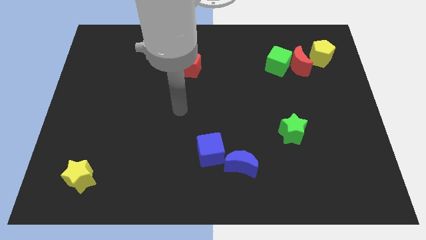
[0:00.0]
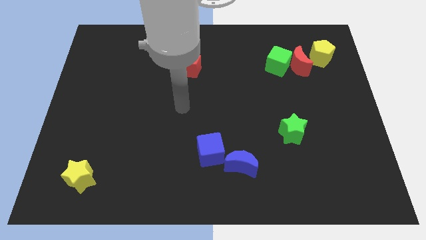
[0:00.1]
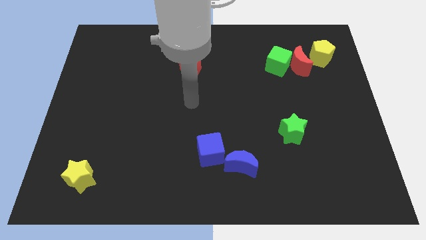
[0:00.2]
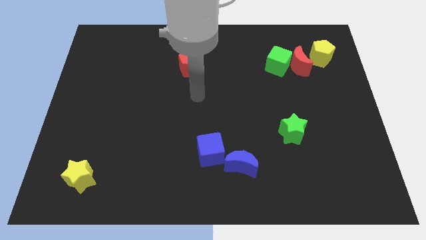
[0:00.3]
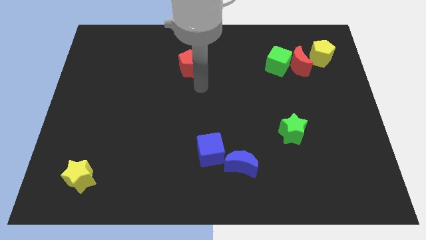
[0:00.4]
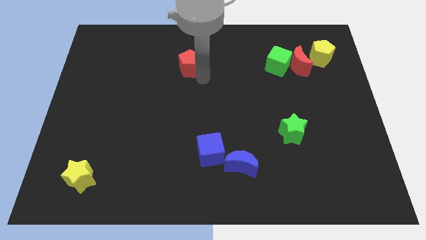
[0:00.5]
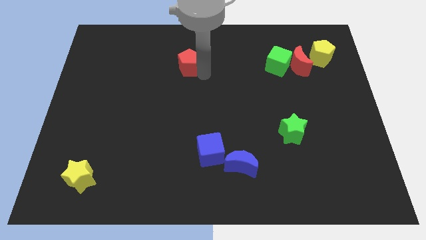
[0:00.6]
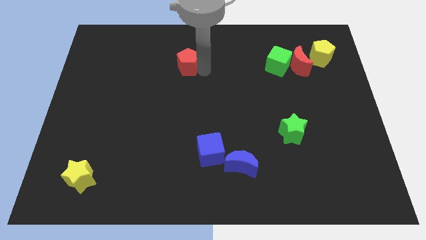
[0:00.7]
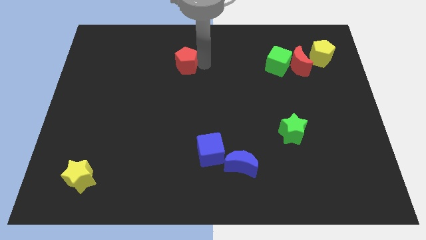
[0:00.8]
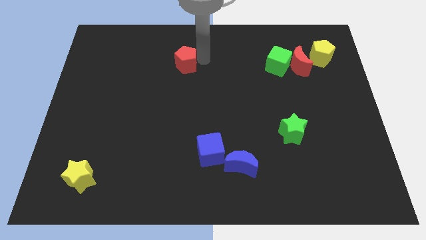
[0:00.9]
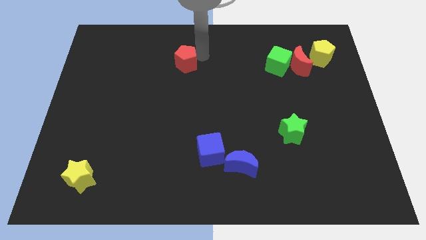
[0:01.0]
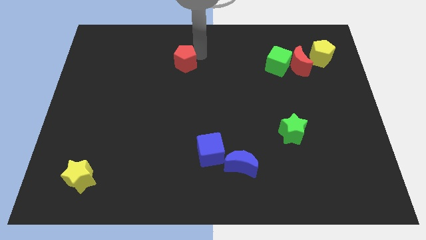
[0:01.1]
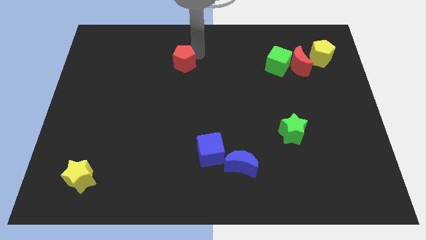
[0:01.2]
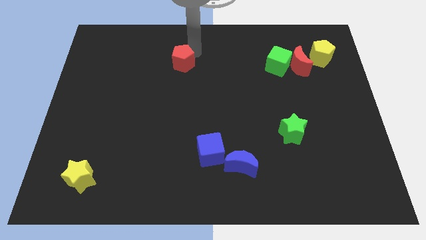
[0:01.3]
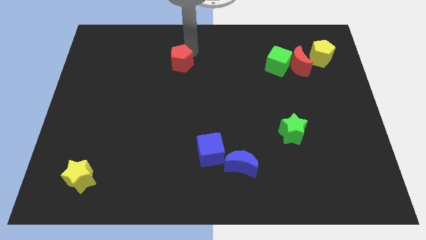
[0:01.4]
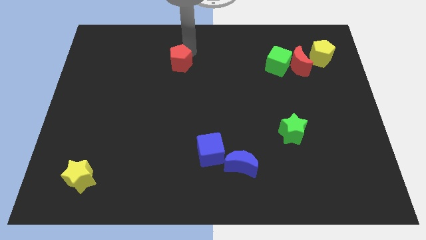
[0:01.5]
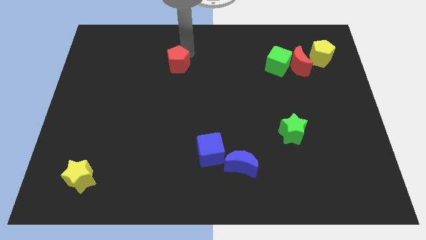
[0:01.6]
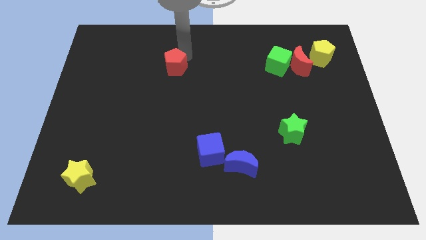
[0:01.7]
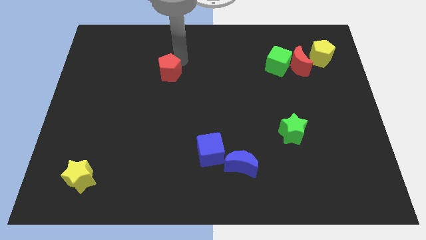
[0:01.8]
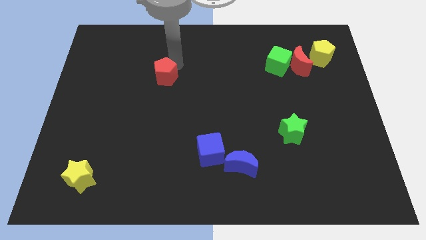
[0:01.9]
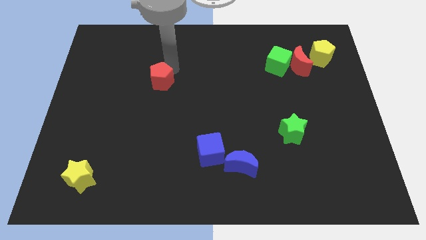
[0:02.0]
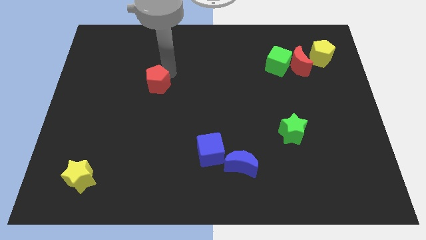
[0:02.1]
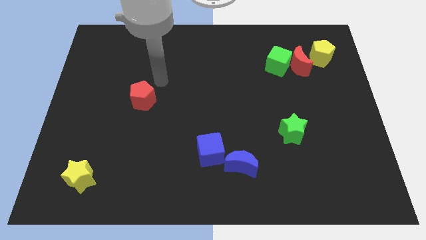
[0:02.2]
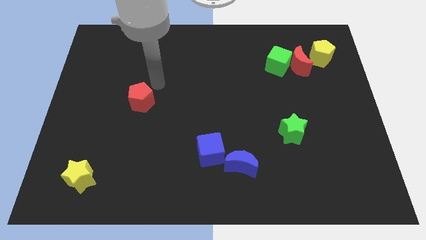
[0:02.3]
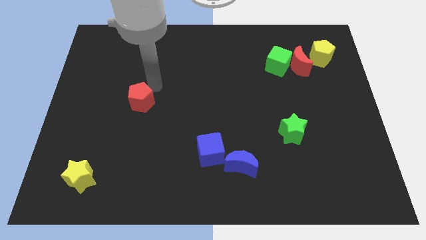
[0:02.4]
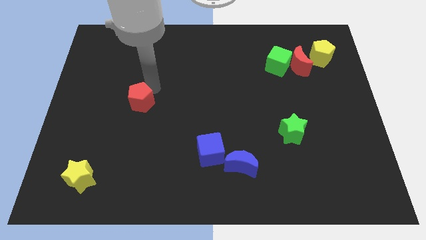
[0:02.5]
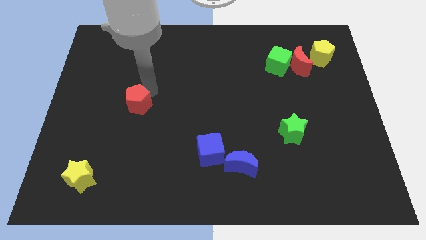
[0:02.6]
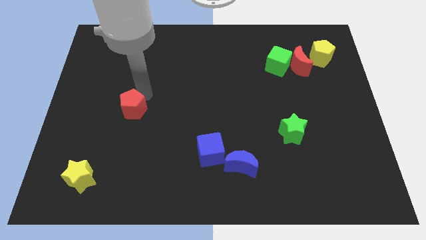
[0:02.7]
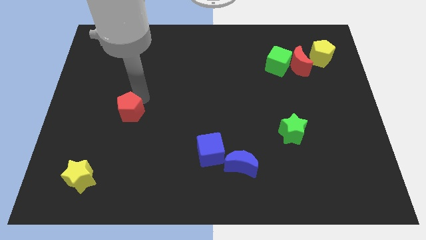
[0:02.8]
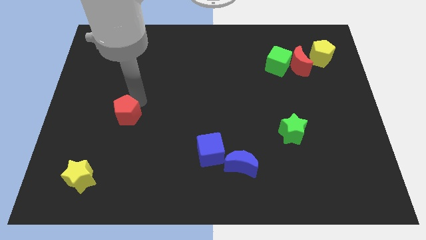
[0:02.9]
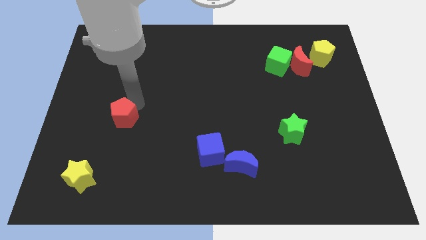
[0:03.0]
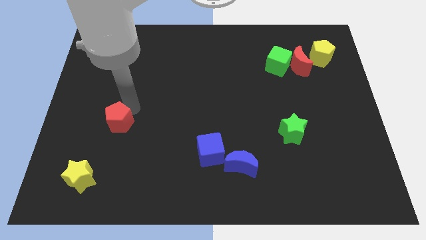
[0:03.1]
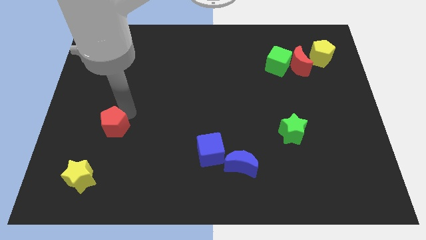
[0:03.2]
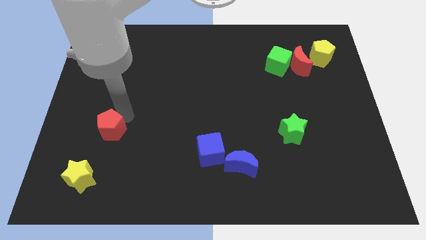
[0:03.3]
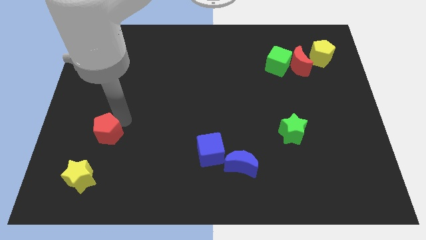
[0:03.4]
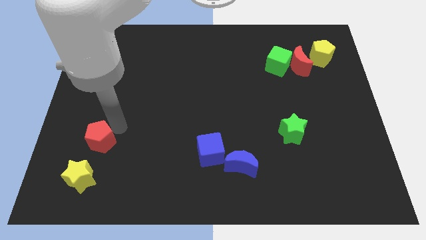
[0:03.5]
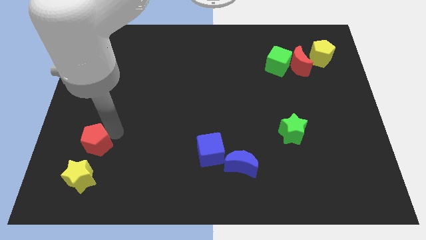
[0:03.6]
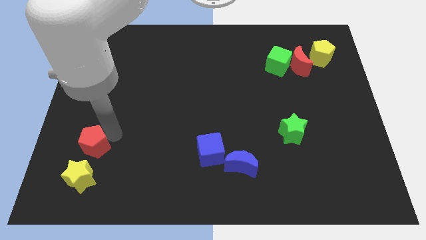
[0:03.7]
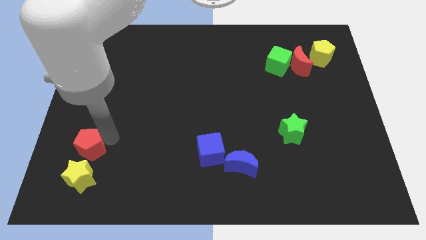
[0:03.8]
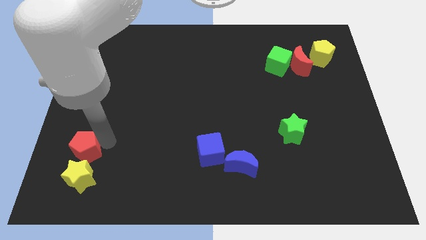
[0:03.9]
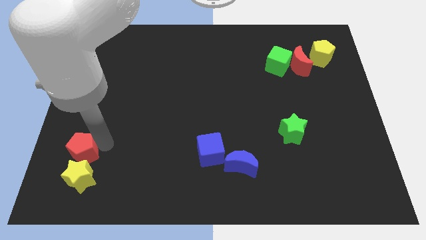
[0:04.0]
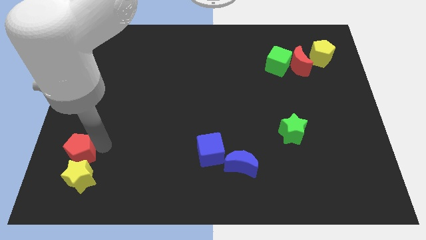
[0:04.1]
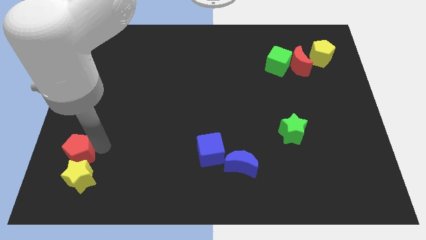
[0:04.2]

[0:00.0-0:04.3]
move the red pentagon to the yellow star

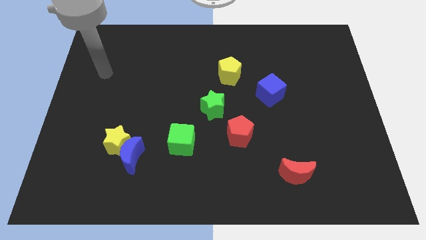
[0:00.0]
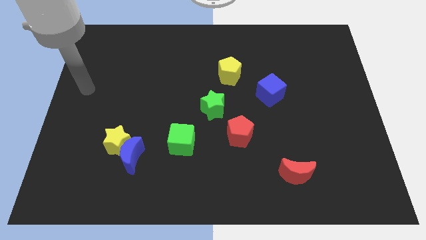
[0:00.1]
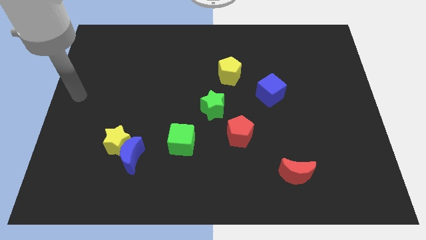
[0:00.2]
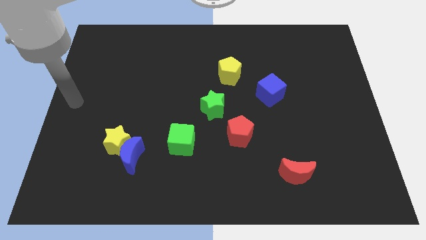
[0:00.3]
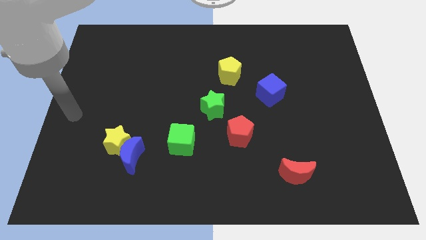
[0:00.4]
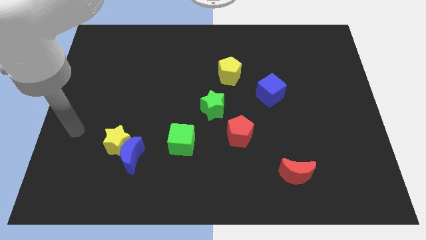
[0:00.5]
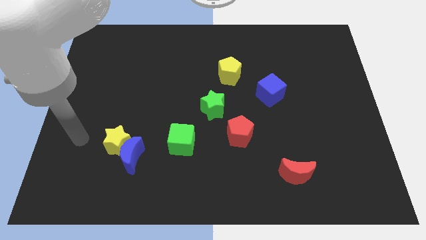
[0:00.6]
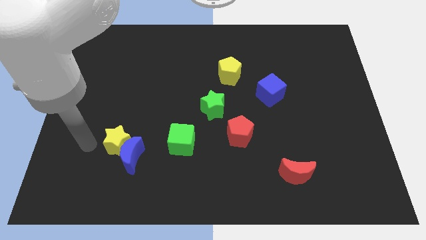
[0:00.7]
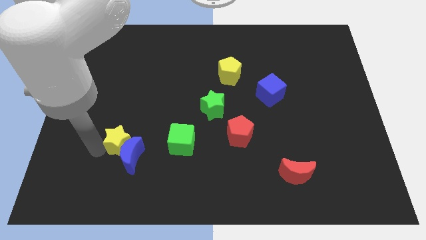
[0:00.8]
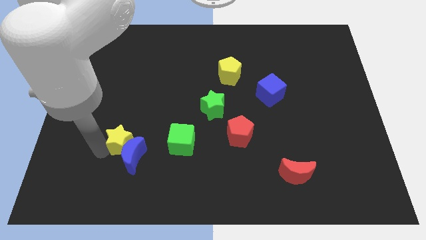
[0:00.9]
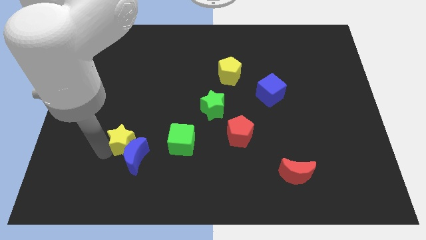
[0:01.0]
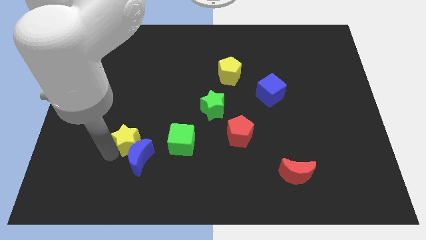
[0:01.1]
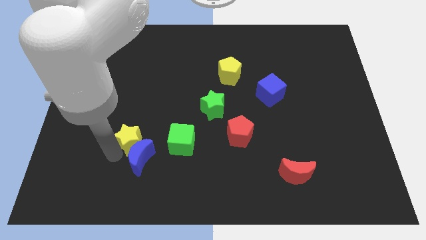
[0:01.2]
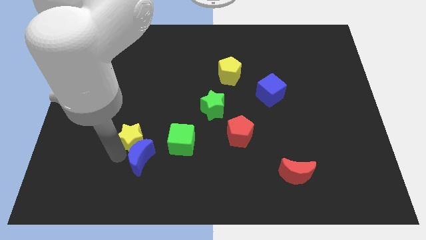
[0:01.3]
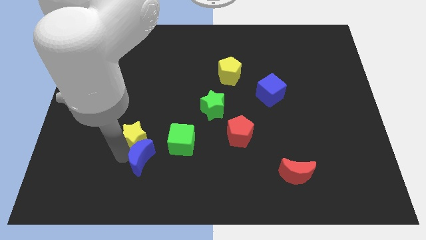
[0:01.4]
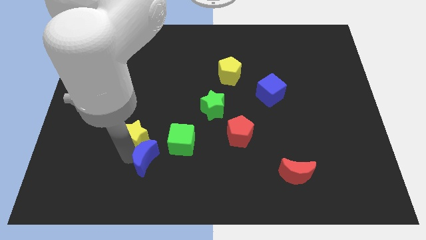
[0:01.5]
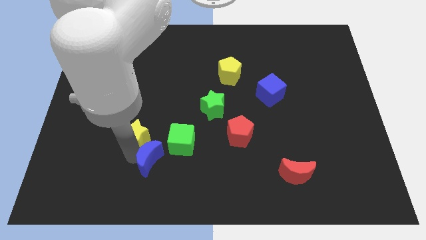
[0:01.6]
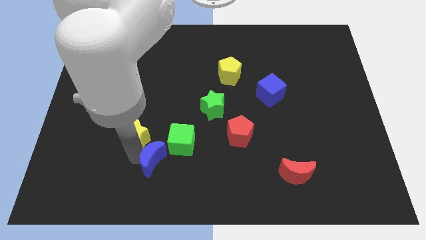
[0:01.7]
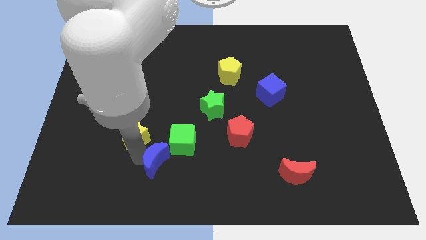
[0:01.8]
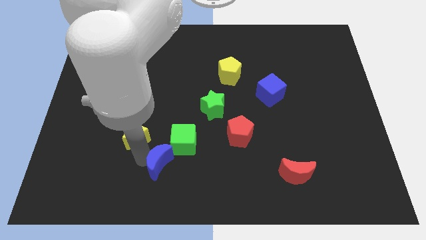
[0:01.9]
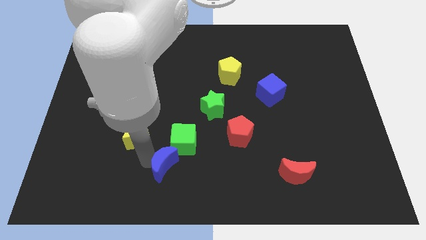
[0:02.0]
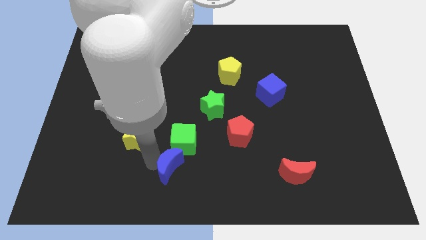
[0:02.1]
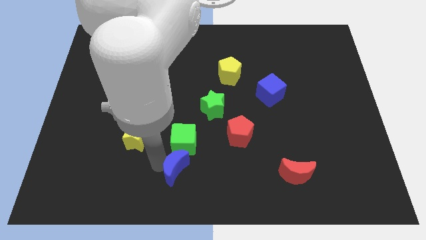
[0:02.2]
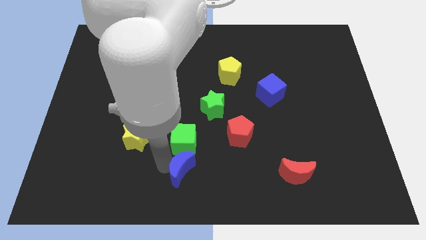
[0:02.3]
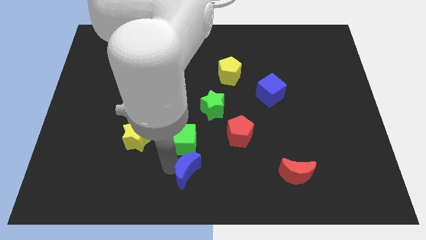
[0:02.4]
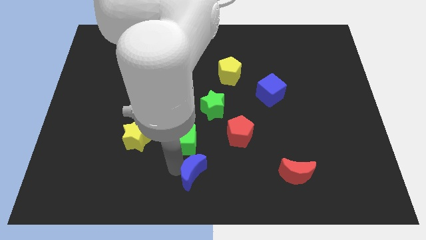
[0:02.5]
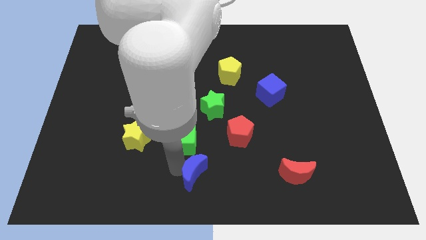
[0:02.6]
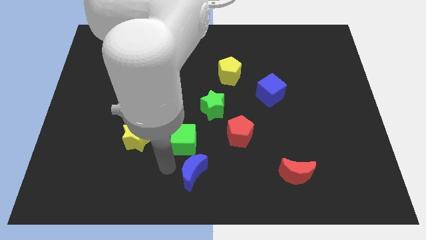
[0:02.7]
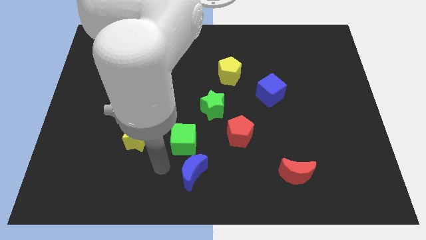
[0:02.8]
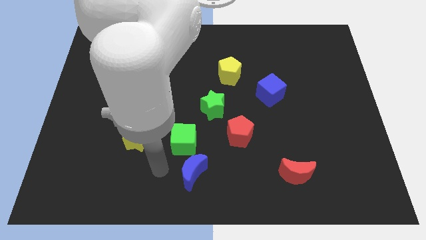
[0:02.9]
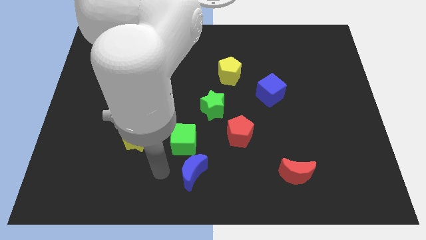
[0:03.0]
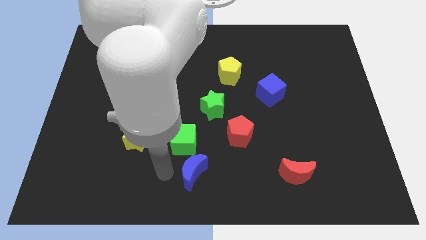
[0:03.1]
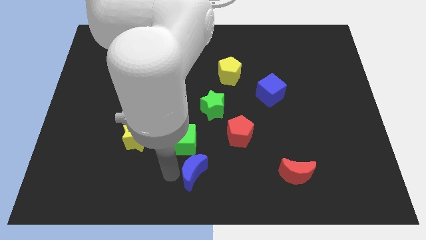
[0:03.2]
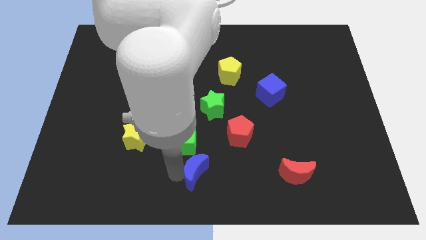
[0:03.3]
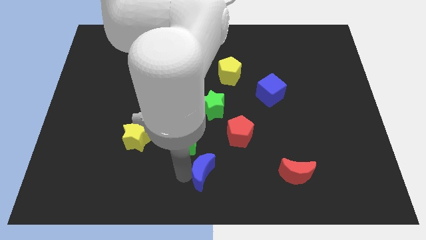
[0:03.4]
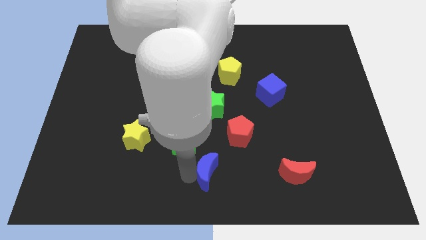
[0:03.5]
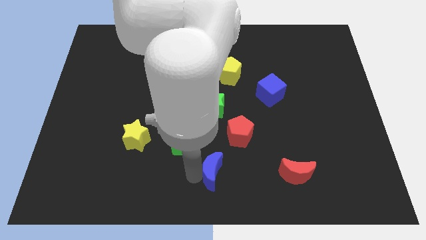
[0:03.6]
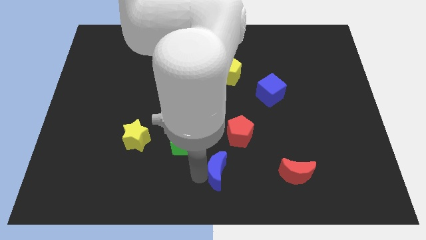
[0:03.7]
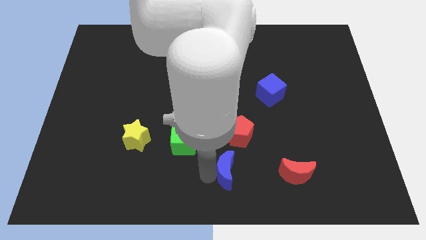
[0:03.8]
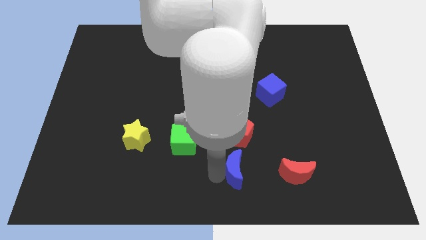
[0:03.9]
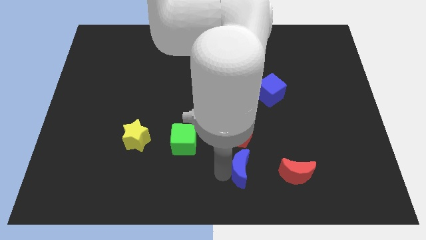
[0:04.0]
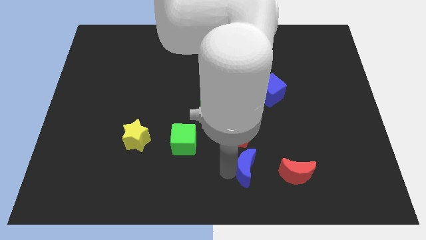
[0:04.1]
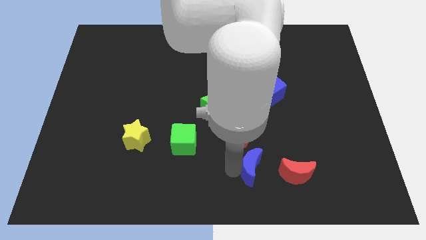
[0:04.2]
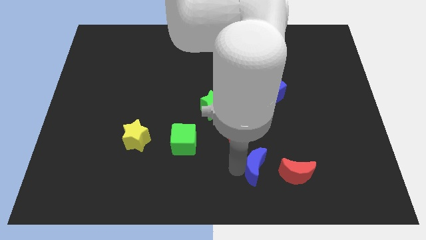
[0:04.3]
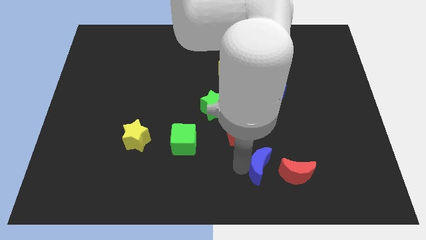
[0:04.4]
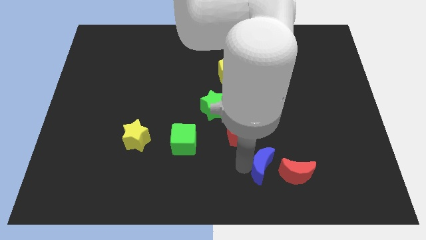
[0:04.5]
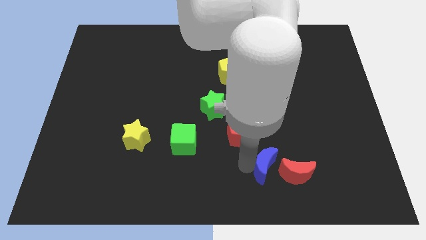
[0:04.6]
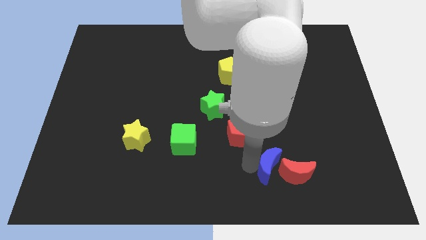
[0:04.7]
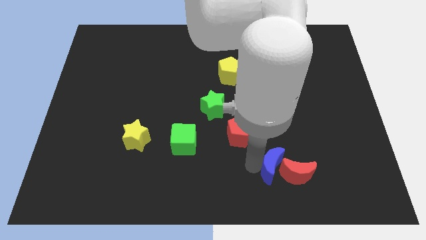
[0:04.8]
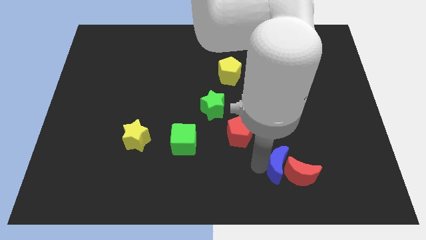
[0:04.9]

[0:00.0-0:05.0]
move the blue moon to the red moon
